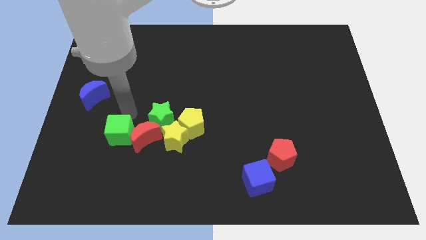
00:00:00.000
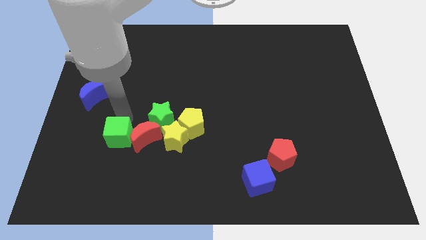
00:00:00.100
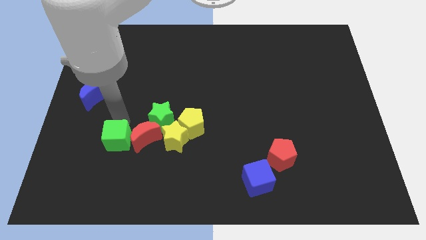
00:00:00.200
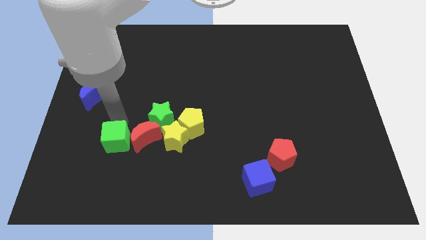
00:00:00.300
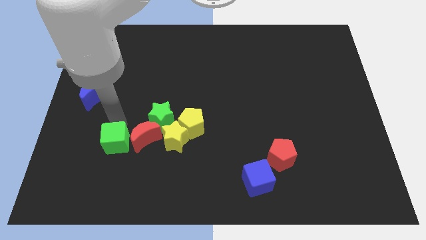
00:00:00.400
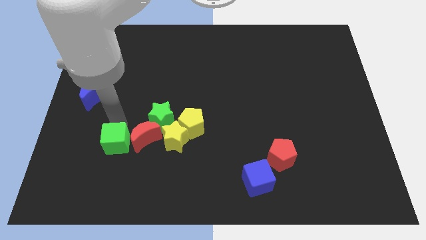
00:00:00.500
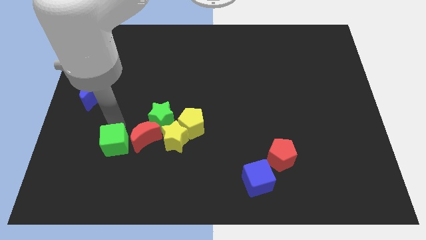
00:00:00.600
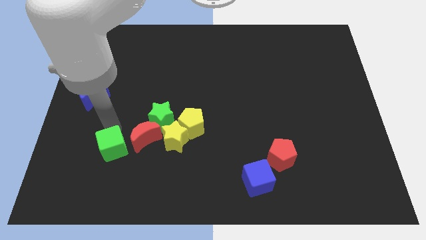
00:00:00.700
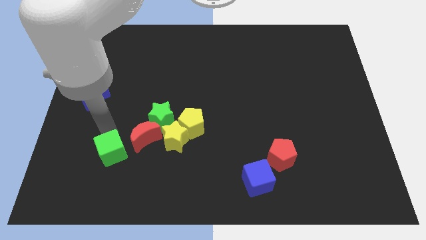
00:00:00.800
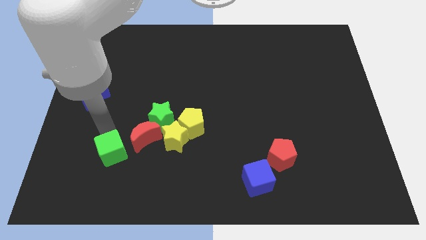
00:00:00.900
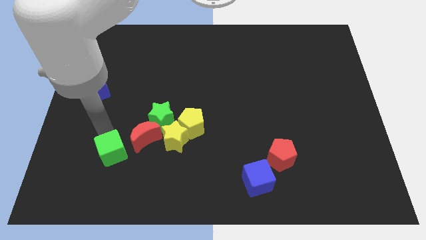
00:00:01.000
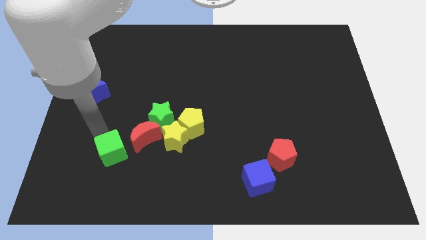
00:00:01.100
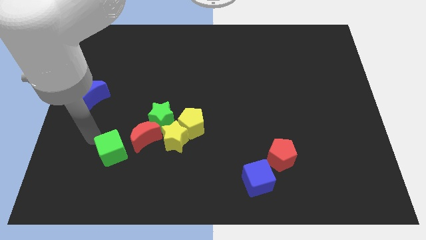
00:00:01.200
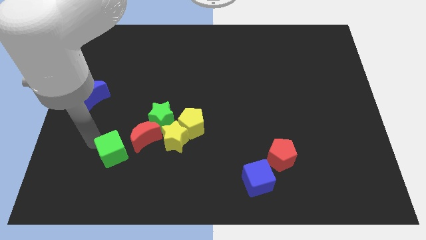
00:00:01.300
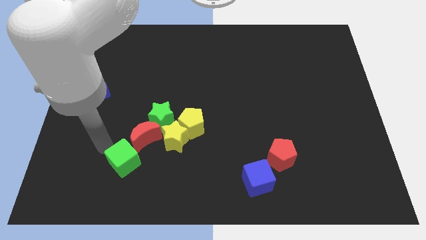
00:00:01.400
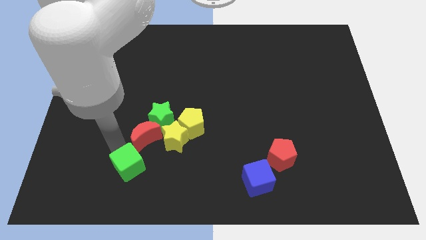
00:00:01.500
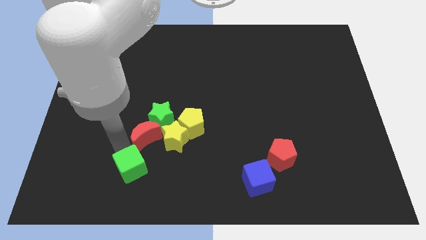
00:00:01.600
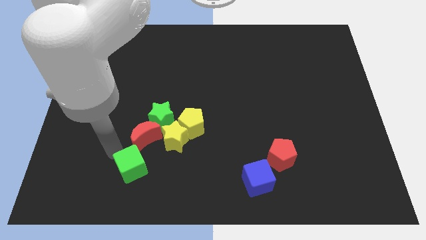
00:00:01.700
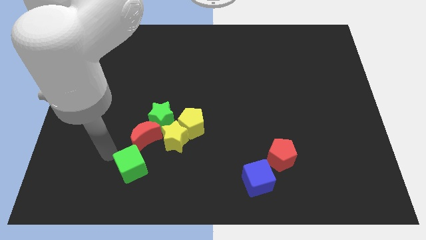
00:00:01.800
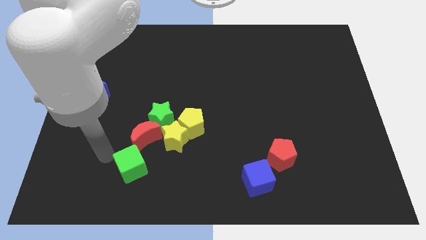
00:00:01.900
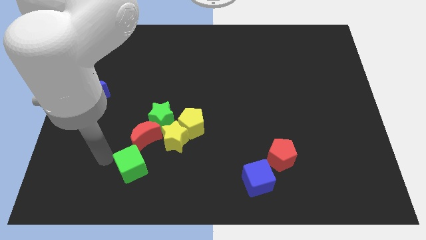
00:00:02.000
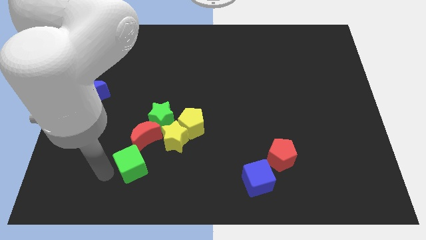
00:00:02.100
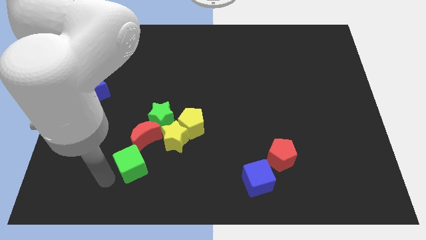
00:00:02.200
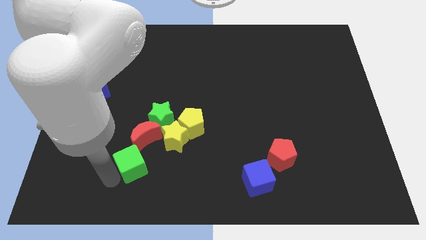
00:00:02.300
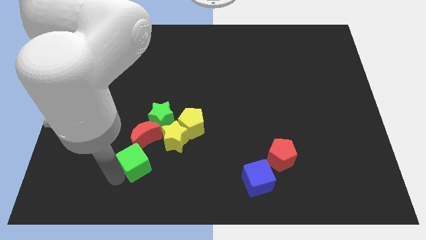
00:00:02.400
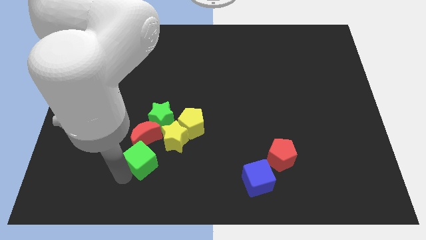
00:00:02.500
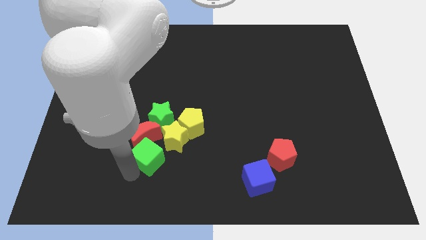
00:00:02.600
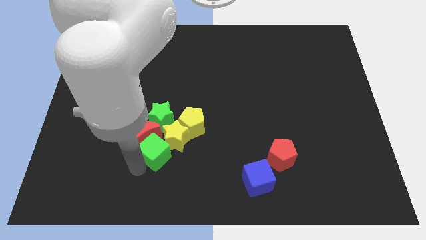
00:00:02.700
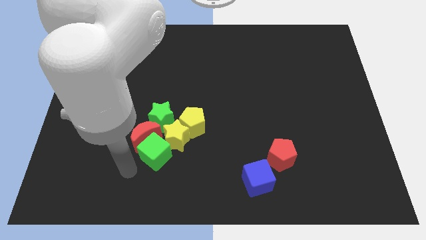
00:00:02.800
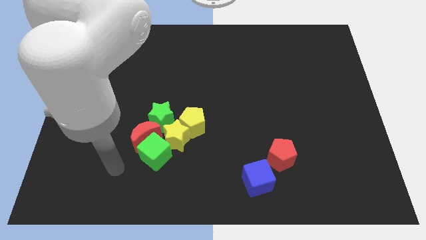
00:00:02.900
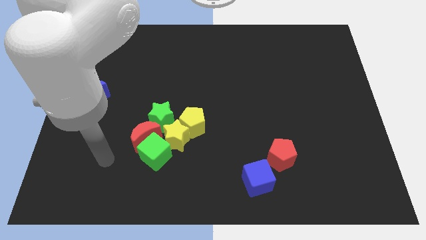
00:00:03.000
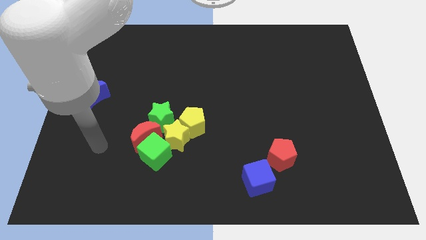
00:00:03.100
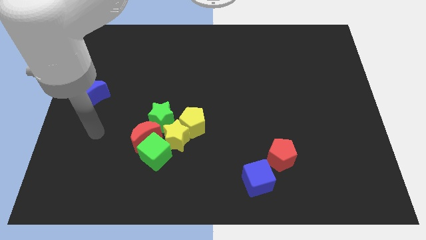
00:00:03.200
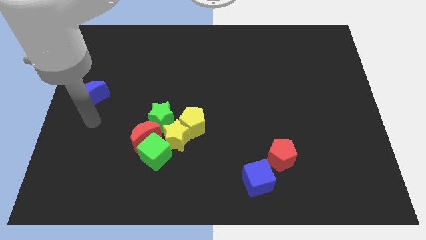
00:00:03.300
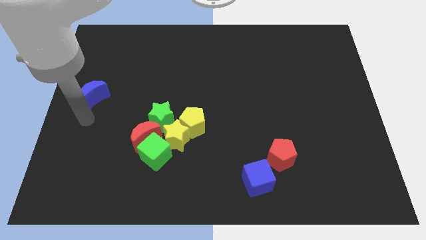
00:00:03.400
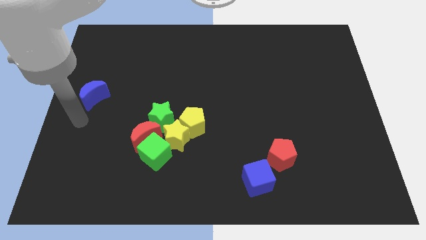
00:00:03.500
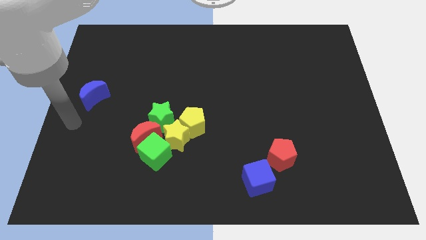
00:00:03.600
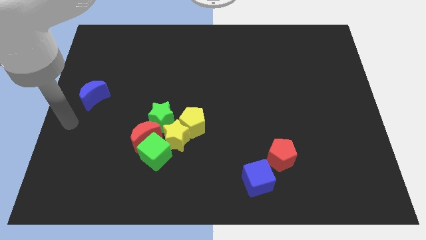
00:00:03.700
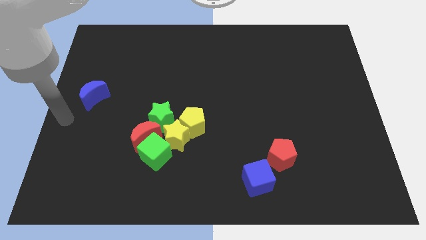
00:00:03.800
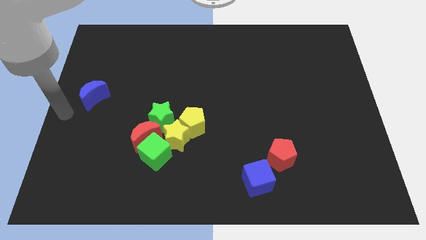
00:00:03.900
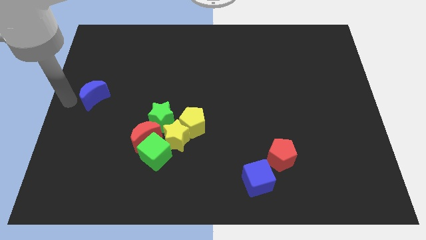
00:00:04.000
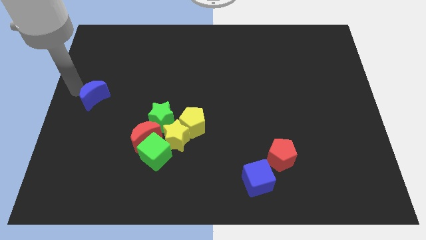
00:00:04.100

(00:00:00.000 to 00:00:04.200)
place a green cube to the bottom left of the yellow star

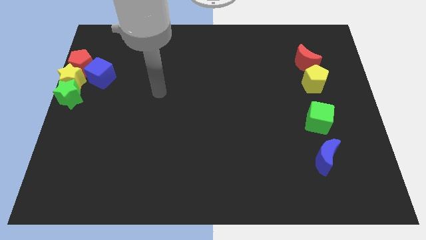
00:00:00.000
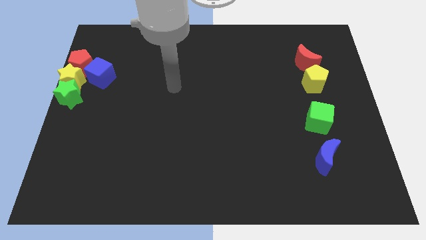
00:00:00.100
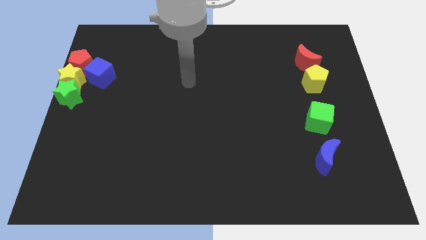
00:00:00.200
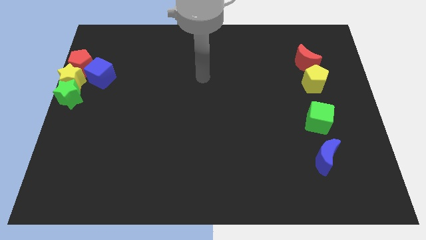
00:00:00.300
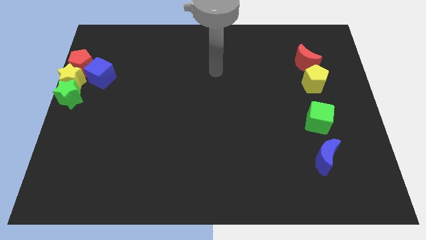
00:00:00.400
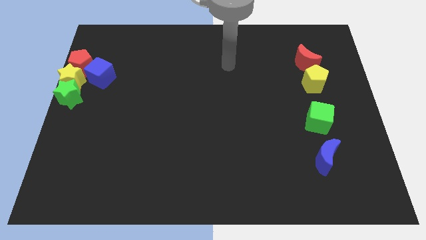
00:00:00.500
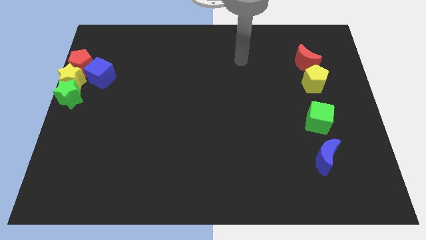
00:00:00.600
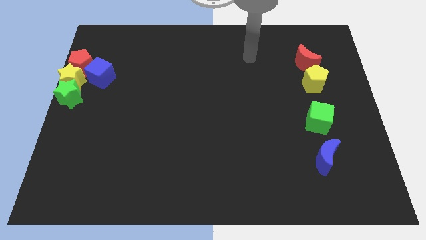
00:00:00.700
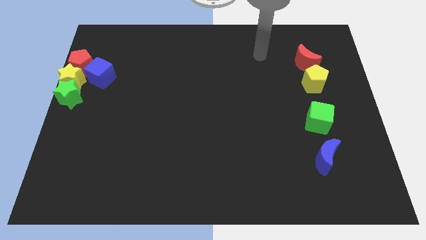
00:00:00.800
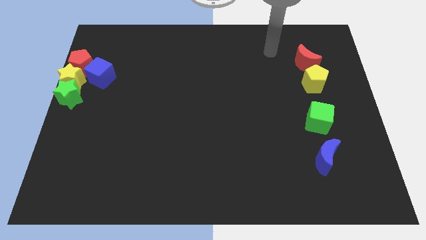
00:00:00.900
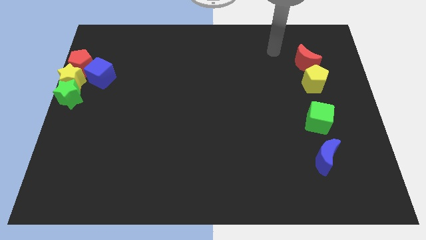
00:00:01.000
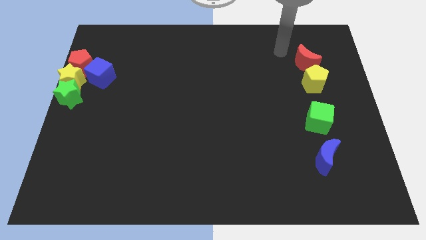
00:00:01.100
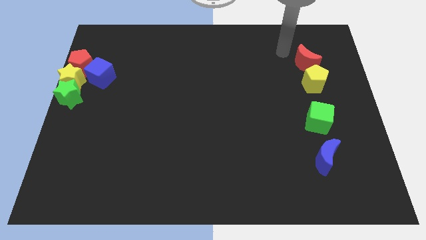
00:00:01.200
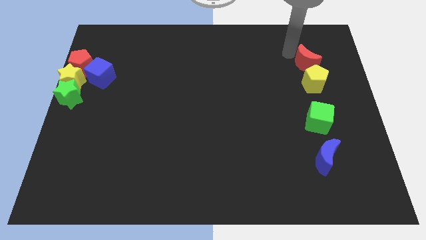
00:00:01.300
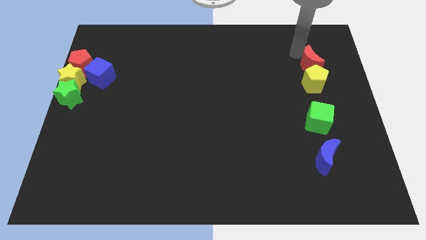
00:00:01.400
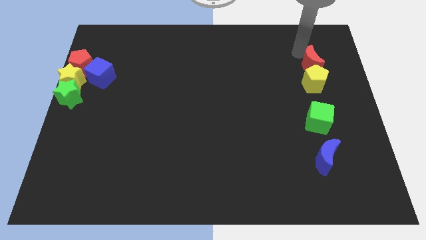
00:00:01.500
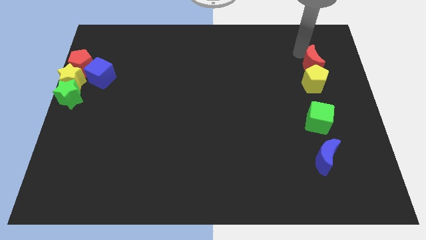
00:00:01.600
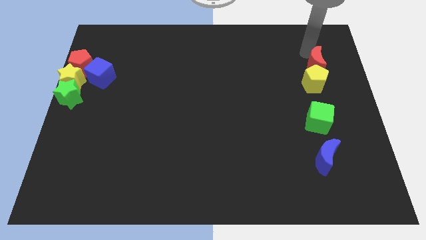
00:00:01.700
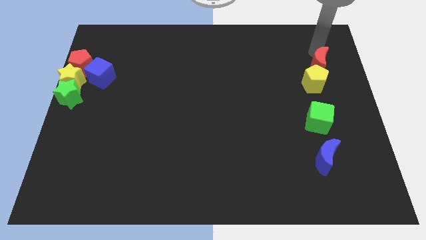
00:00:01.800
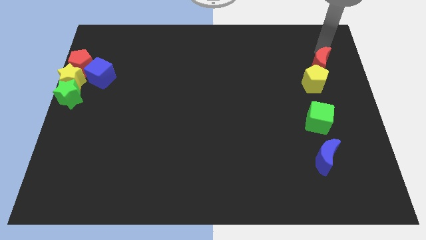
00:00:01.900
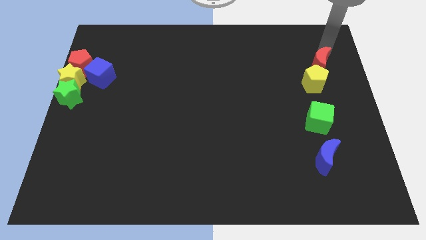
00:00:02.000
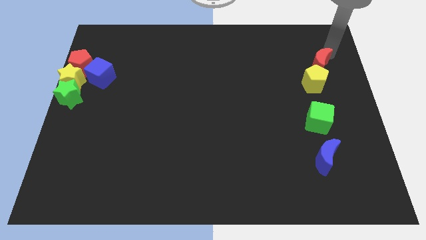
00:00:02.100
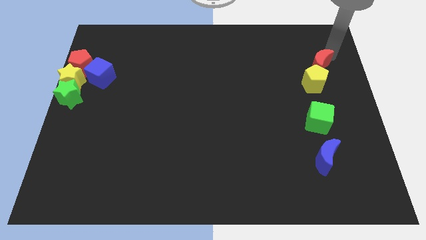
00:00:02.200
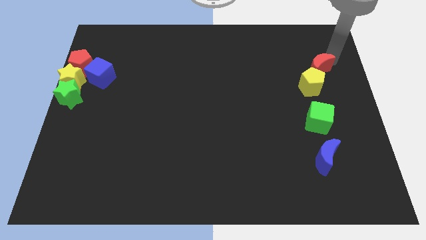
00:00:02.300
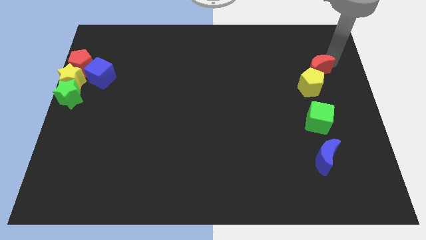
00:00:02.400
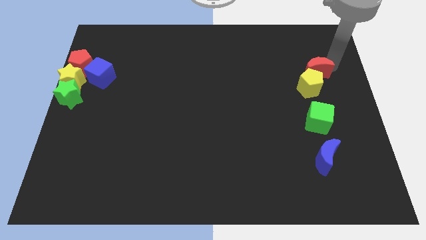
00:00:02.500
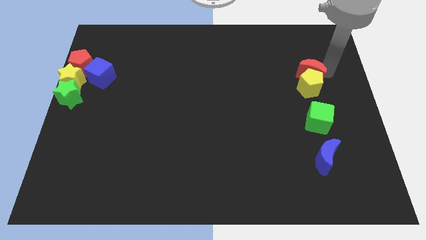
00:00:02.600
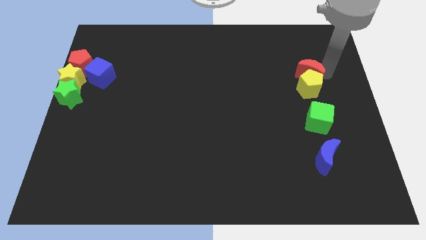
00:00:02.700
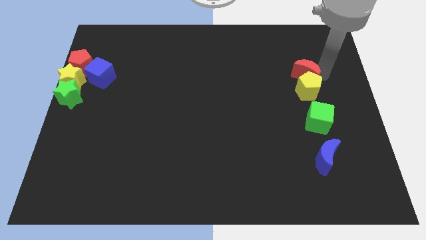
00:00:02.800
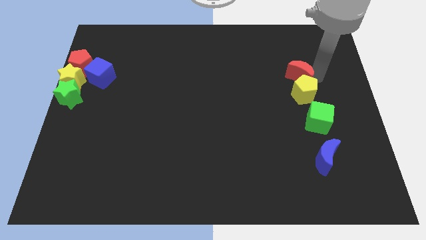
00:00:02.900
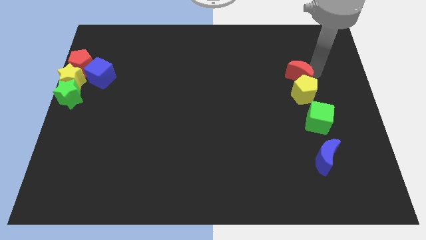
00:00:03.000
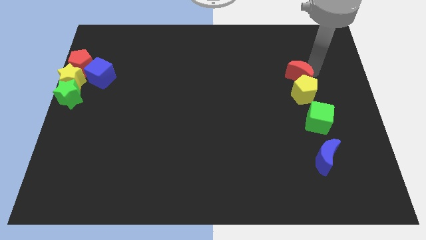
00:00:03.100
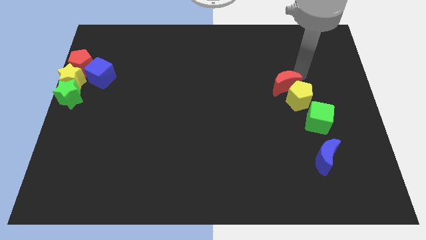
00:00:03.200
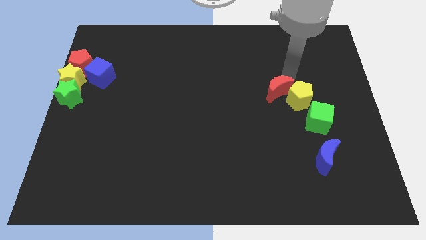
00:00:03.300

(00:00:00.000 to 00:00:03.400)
push the red crescent into the yellow pentagon

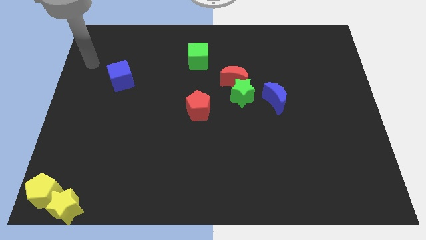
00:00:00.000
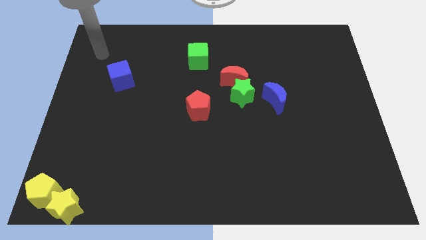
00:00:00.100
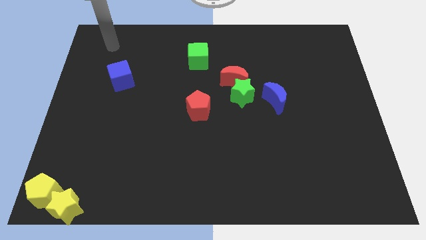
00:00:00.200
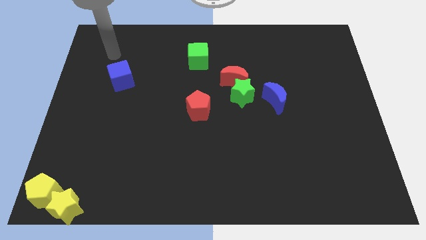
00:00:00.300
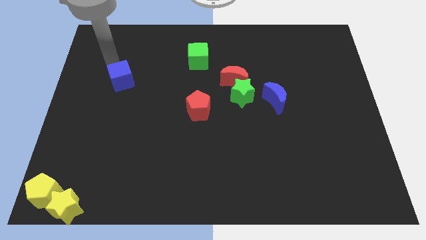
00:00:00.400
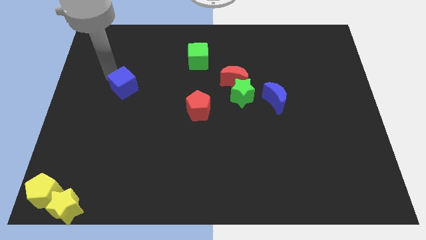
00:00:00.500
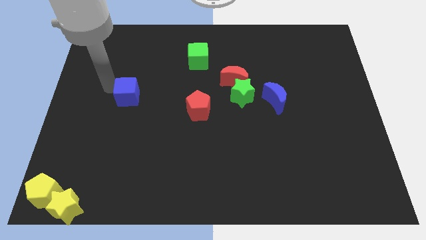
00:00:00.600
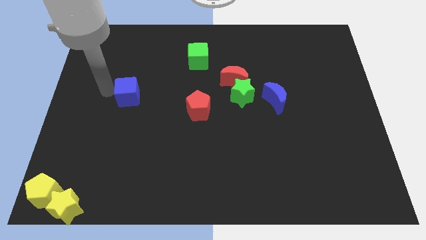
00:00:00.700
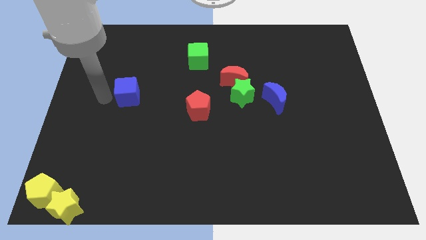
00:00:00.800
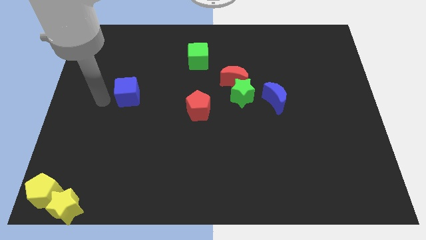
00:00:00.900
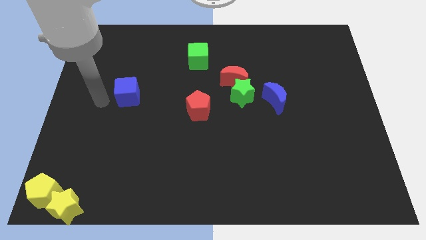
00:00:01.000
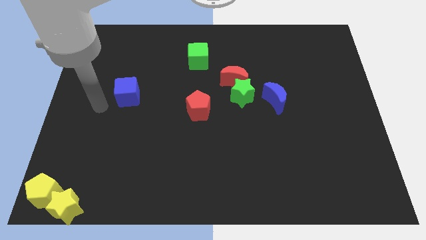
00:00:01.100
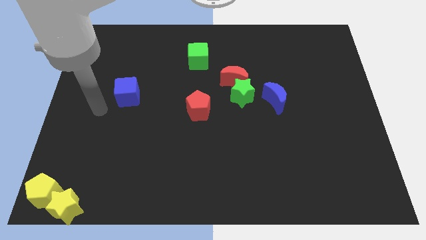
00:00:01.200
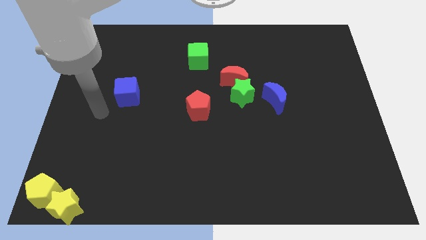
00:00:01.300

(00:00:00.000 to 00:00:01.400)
push the blue cube slightly to the bottom

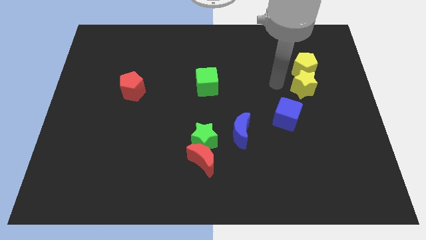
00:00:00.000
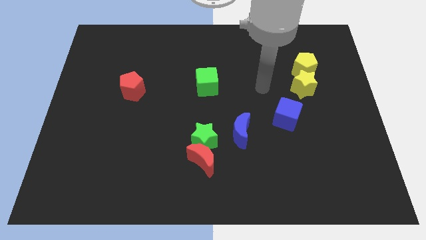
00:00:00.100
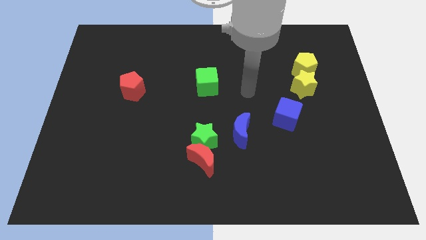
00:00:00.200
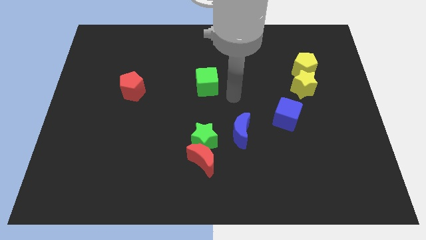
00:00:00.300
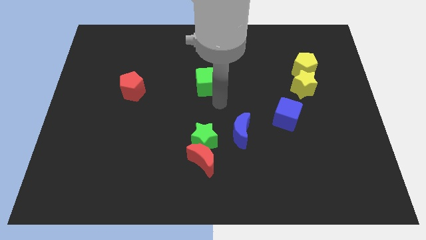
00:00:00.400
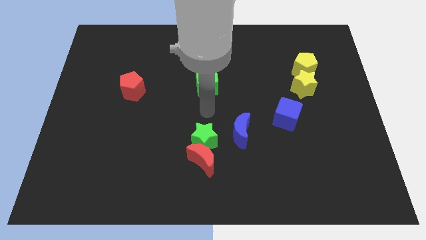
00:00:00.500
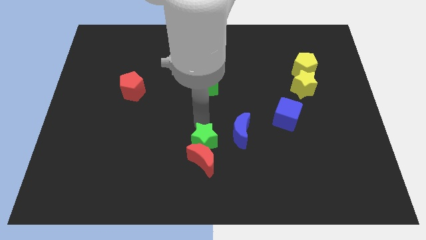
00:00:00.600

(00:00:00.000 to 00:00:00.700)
go away from the yellow star
